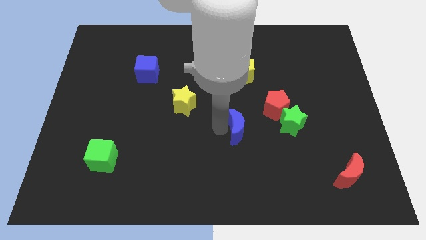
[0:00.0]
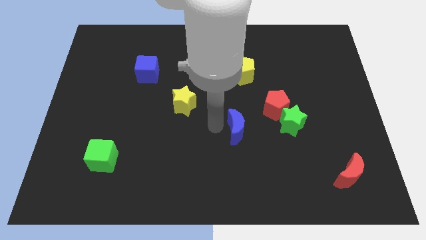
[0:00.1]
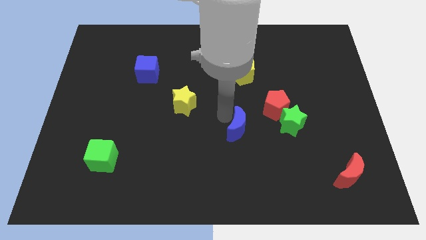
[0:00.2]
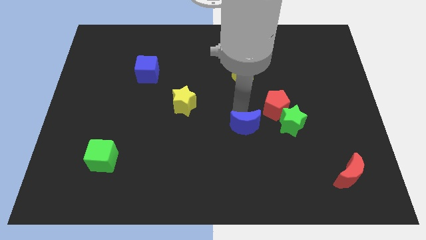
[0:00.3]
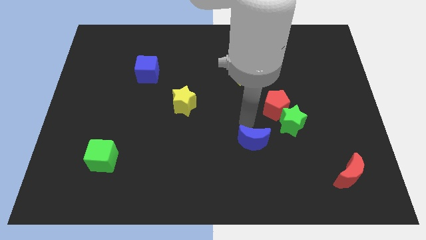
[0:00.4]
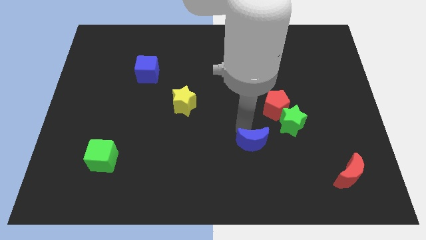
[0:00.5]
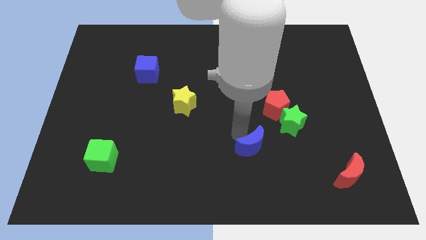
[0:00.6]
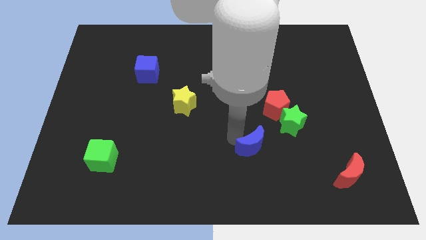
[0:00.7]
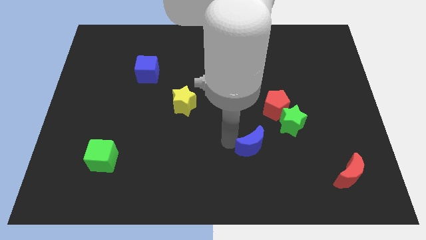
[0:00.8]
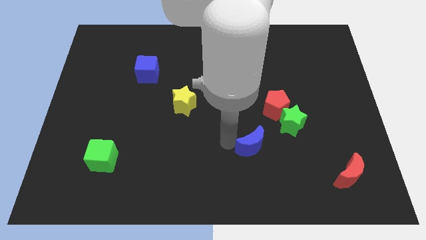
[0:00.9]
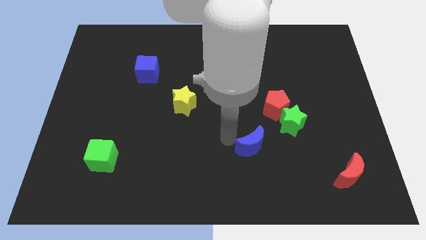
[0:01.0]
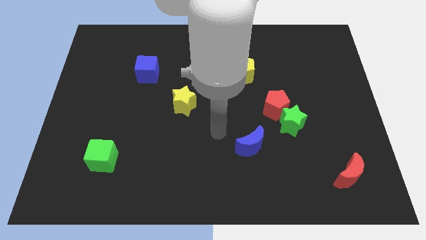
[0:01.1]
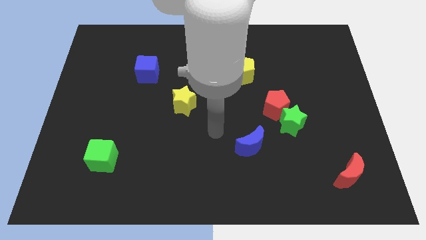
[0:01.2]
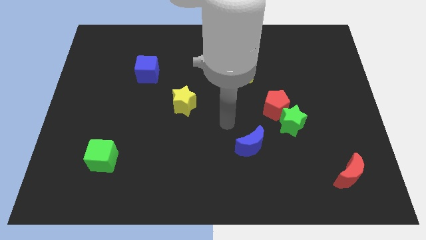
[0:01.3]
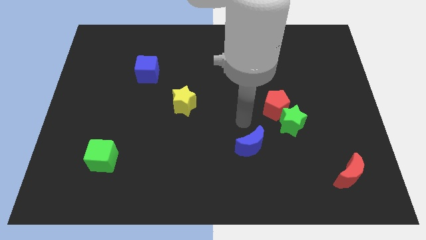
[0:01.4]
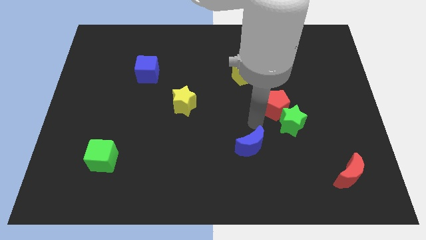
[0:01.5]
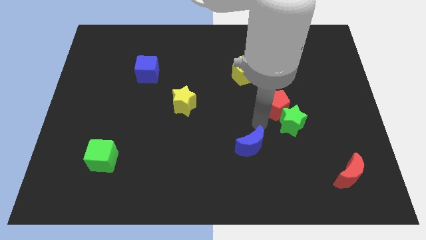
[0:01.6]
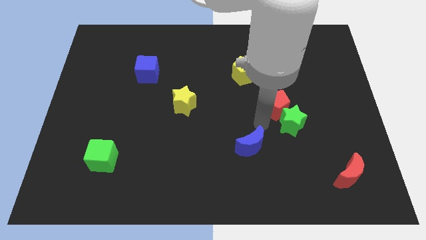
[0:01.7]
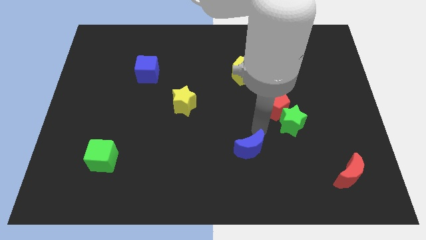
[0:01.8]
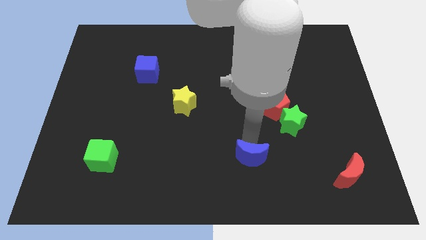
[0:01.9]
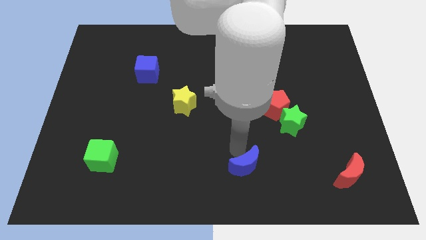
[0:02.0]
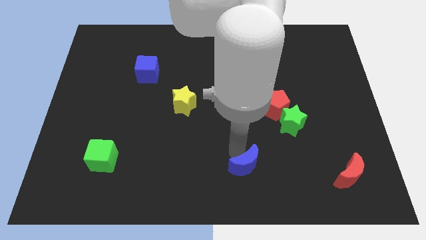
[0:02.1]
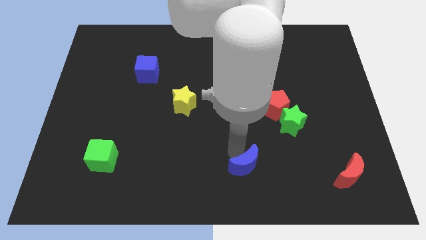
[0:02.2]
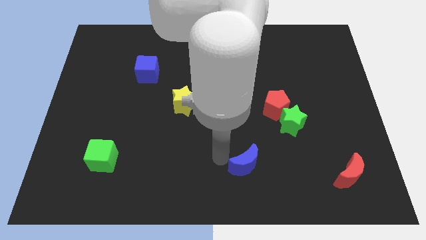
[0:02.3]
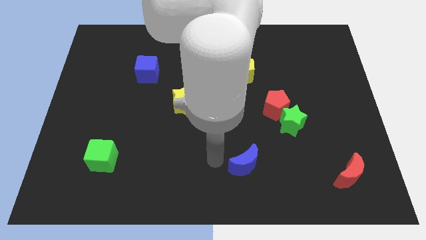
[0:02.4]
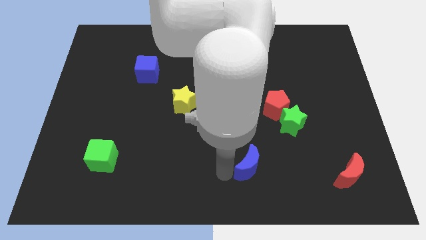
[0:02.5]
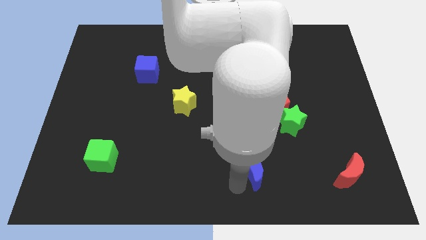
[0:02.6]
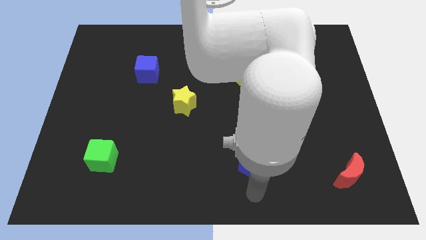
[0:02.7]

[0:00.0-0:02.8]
move the blue crescent towards the bottom side

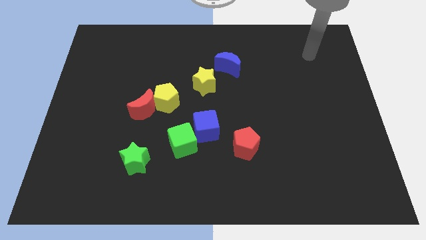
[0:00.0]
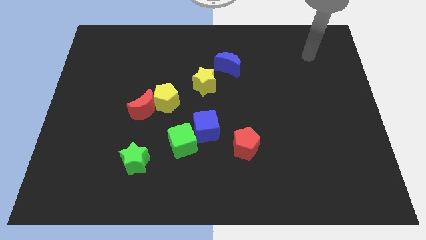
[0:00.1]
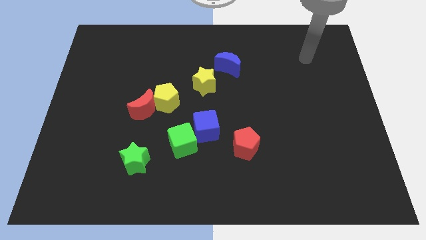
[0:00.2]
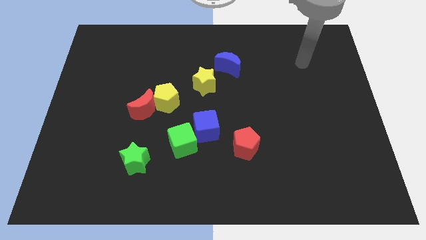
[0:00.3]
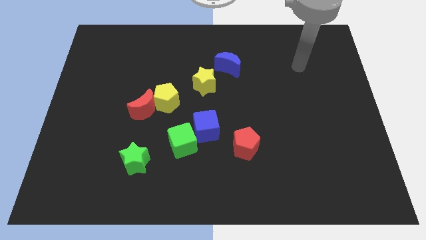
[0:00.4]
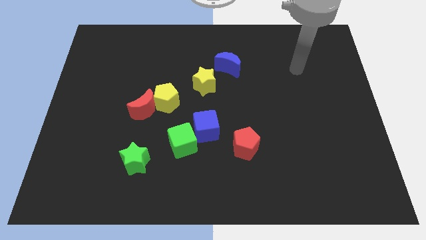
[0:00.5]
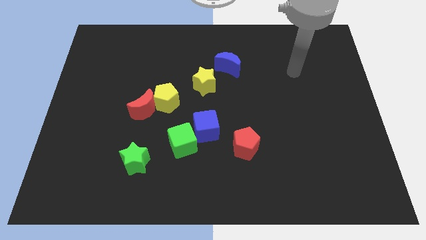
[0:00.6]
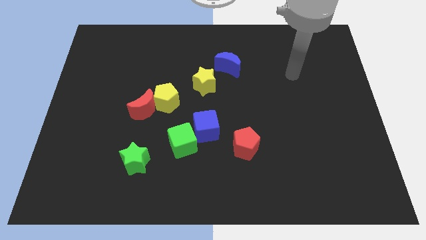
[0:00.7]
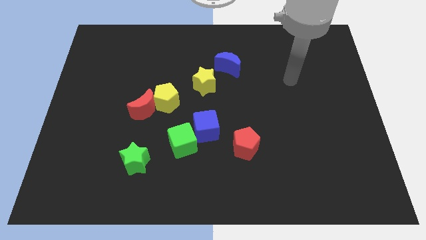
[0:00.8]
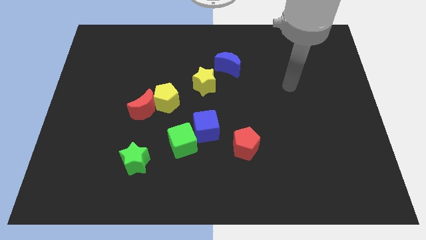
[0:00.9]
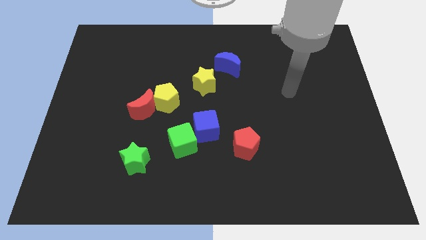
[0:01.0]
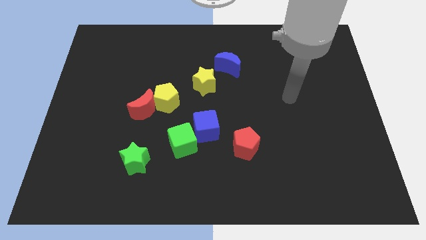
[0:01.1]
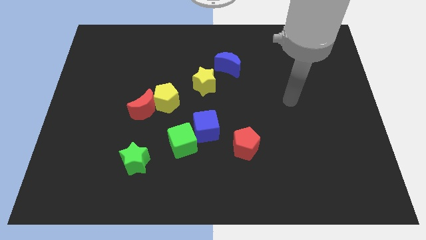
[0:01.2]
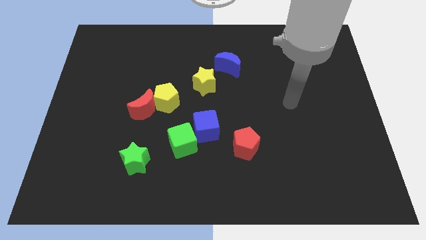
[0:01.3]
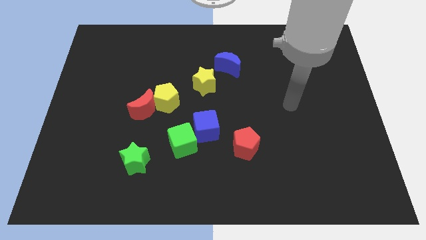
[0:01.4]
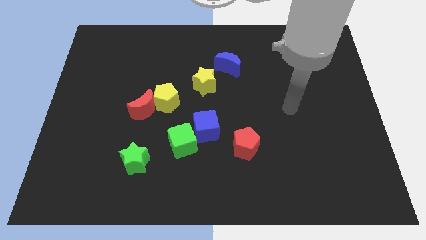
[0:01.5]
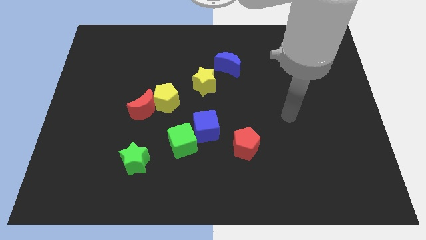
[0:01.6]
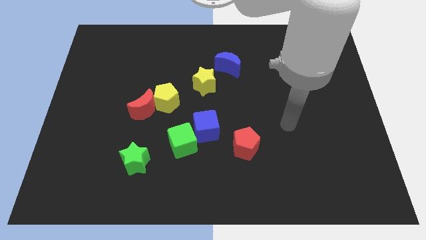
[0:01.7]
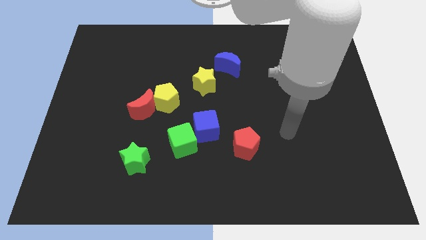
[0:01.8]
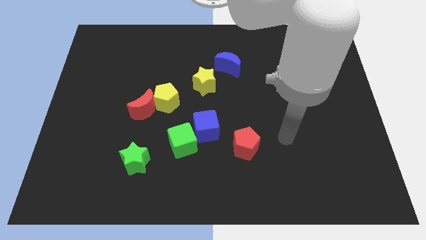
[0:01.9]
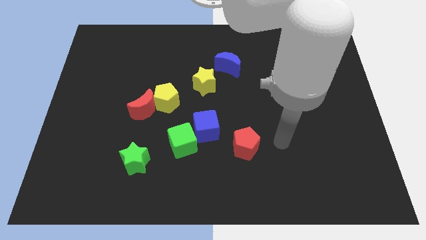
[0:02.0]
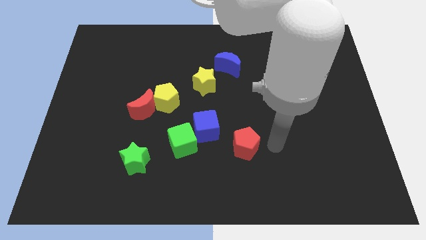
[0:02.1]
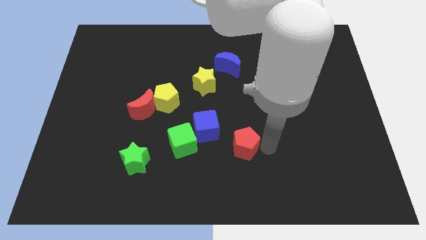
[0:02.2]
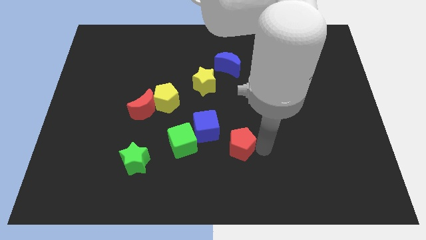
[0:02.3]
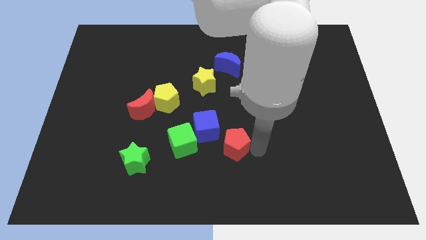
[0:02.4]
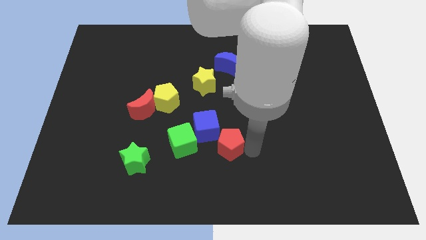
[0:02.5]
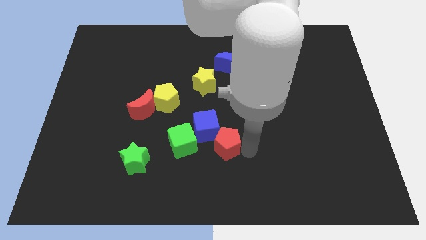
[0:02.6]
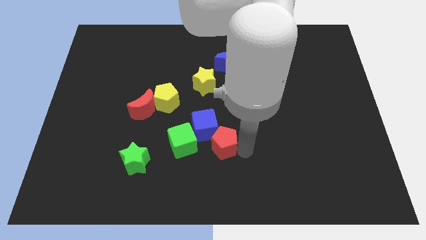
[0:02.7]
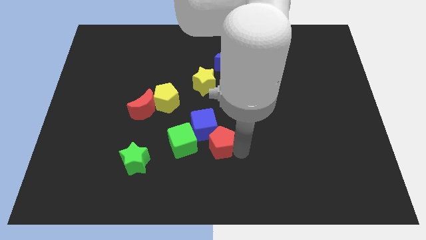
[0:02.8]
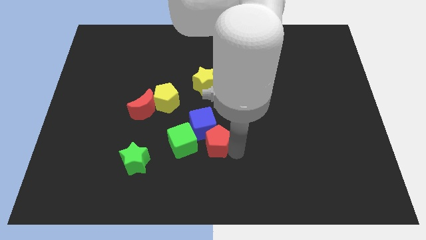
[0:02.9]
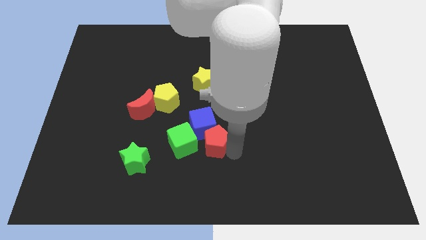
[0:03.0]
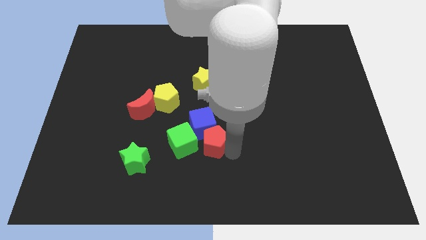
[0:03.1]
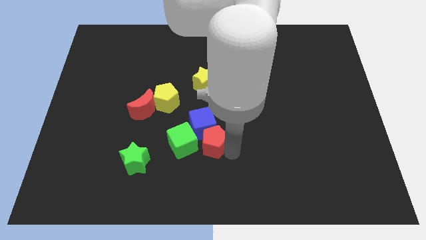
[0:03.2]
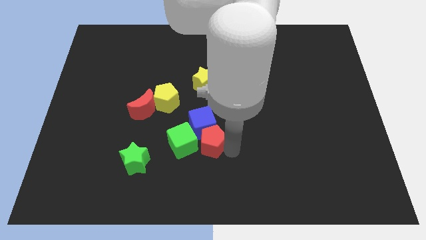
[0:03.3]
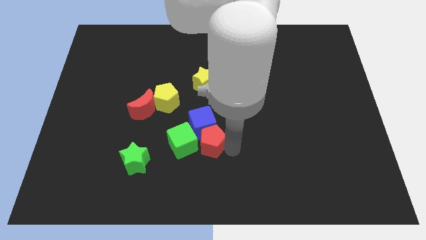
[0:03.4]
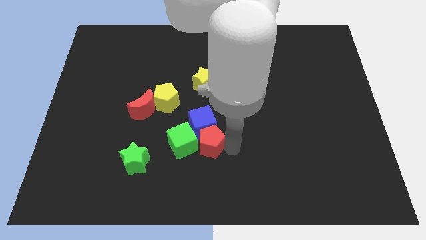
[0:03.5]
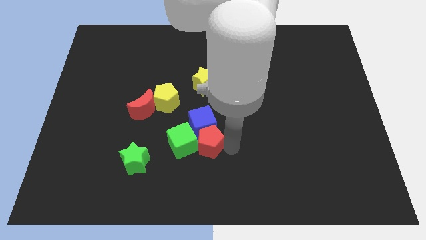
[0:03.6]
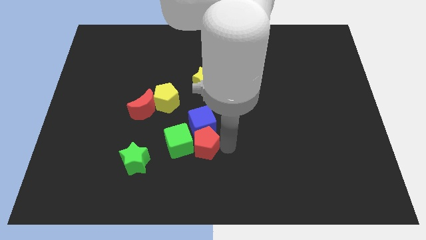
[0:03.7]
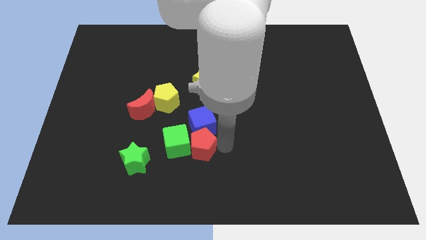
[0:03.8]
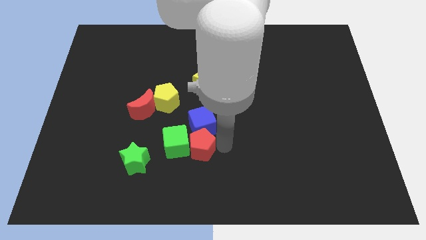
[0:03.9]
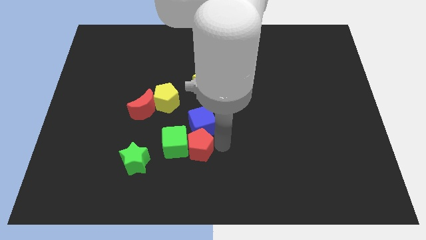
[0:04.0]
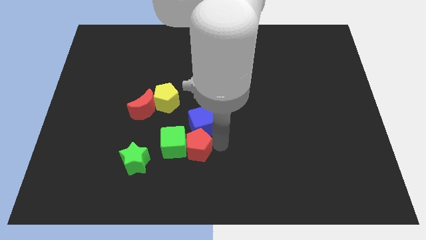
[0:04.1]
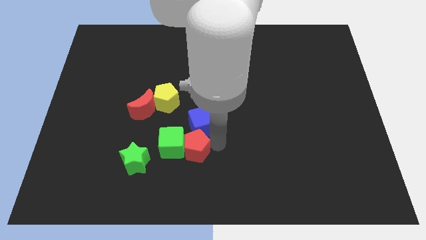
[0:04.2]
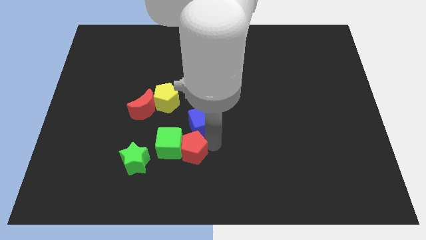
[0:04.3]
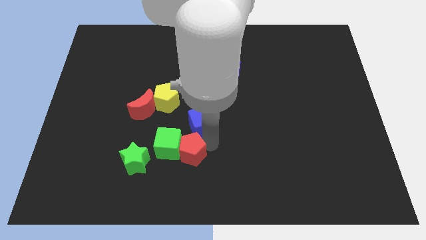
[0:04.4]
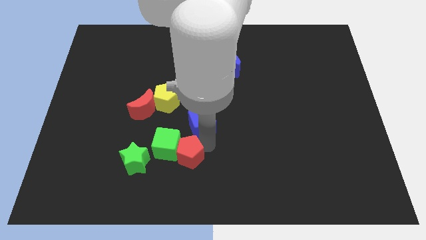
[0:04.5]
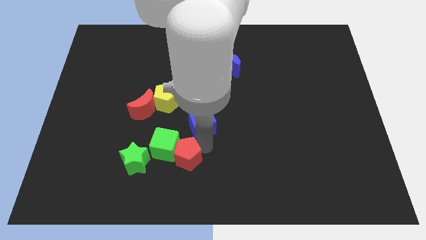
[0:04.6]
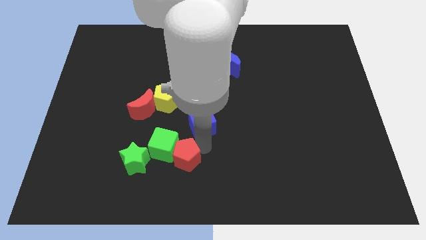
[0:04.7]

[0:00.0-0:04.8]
move red pentagon into green cube

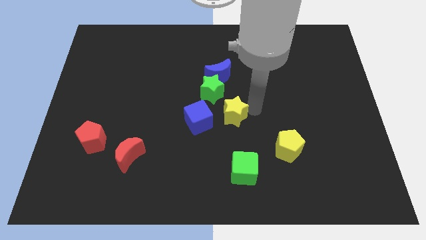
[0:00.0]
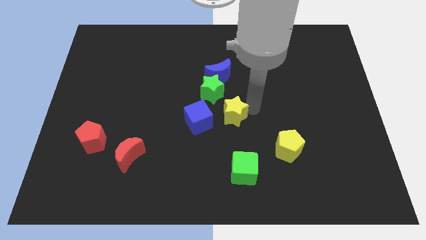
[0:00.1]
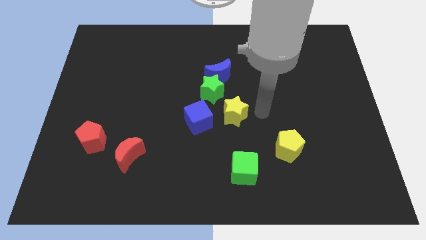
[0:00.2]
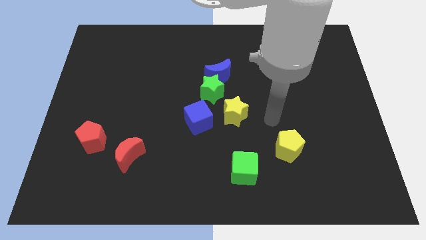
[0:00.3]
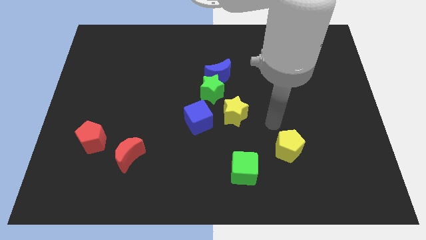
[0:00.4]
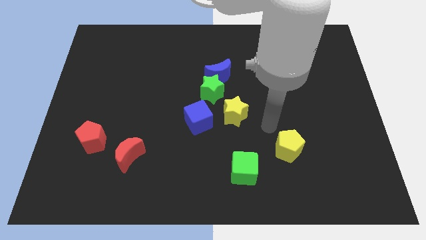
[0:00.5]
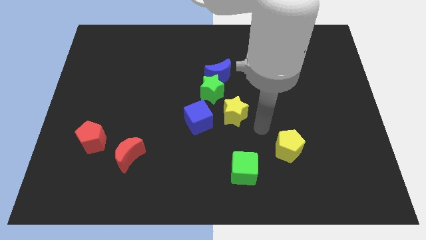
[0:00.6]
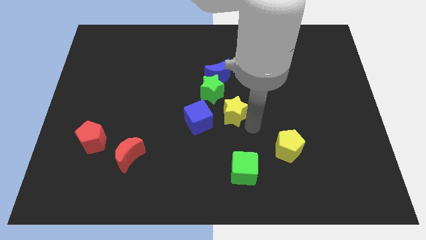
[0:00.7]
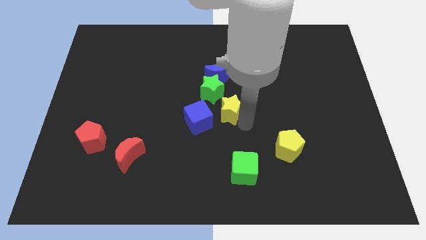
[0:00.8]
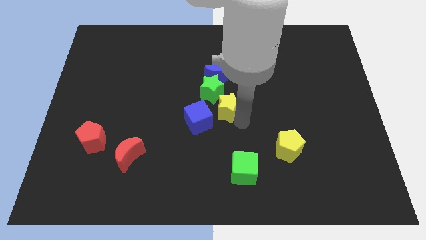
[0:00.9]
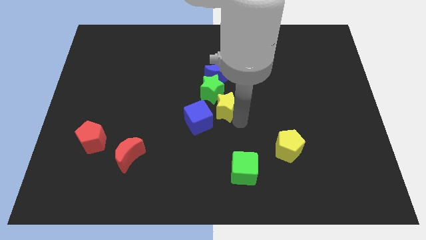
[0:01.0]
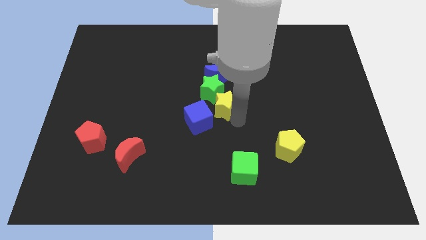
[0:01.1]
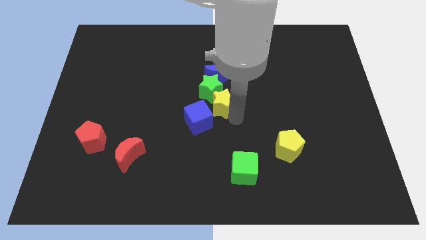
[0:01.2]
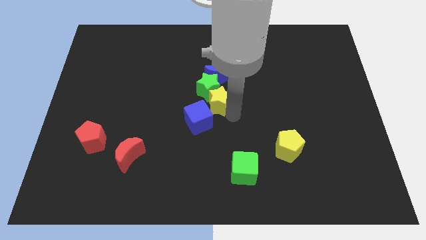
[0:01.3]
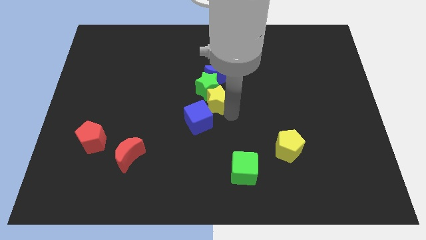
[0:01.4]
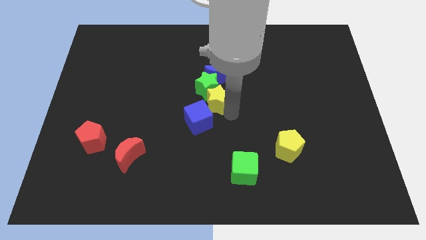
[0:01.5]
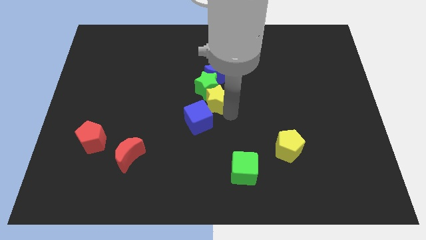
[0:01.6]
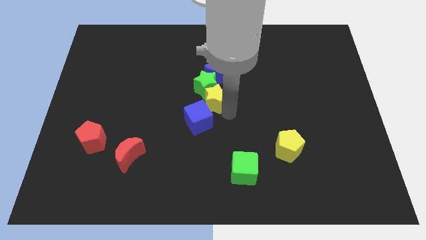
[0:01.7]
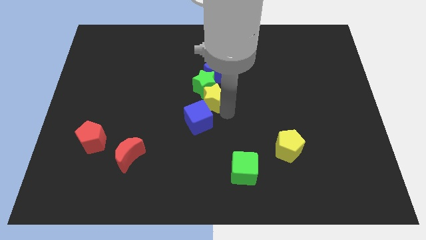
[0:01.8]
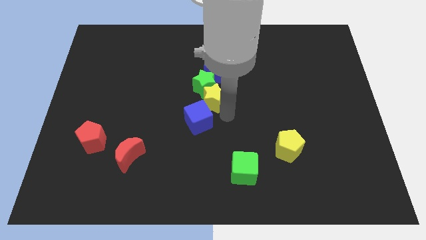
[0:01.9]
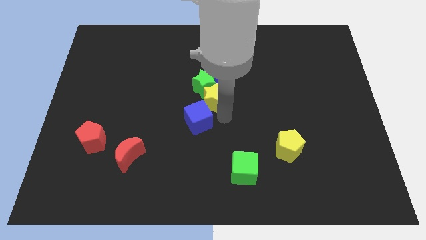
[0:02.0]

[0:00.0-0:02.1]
push the yellow star into the green star
